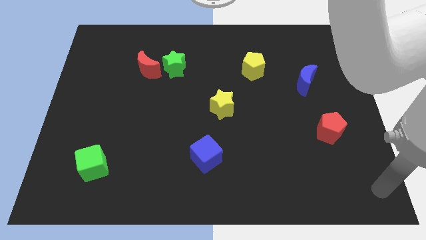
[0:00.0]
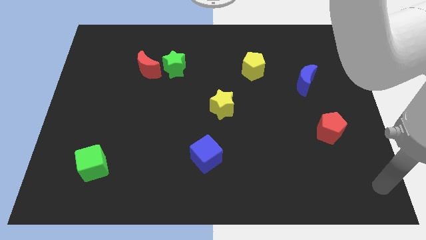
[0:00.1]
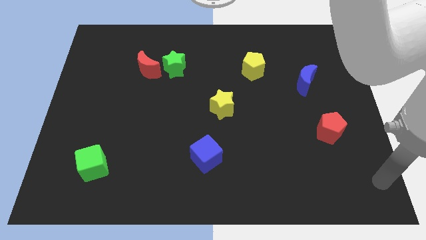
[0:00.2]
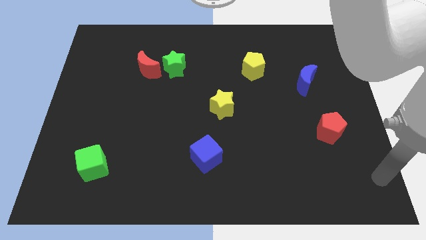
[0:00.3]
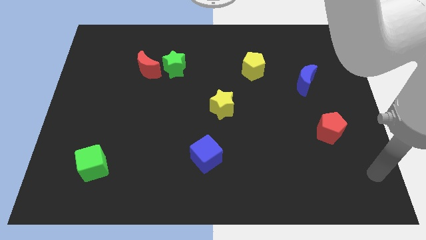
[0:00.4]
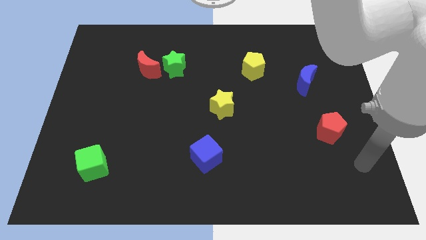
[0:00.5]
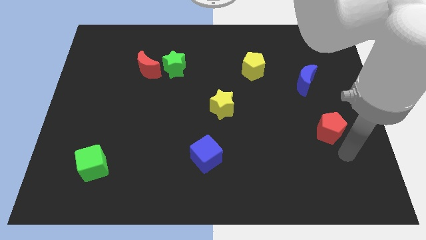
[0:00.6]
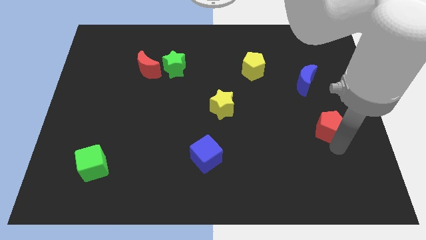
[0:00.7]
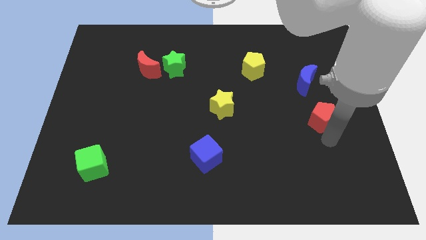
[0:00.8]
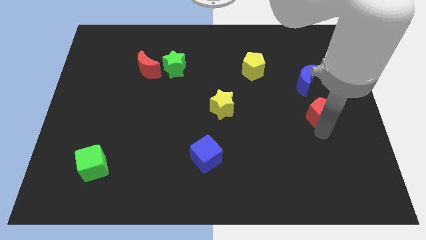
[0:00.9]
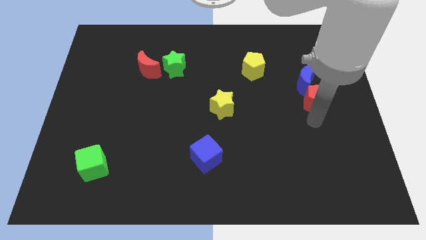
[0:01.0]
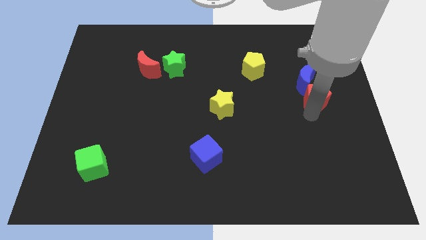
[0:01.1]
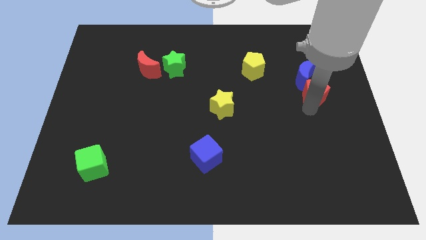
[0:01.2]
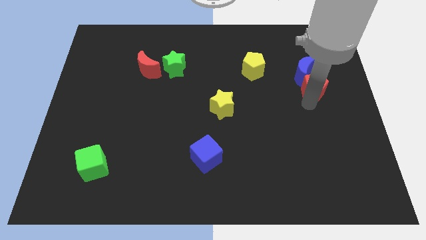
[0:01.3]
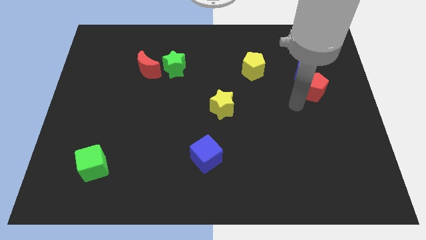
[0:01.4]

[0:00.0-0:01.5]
move the red pentagon into the blue moon

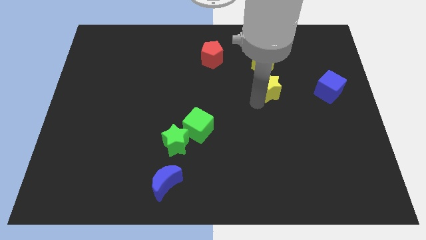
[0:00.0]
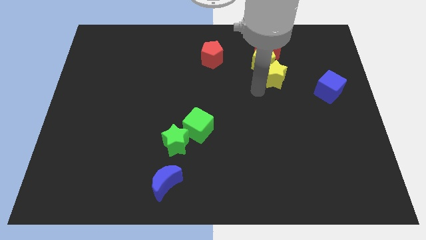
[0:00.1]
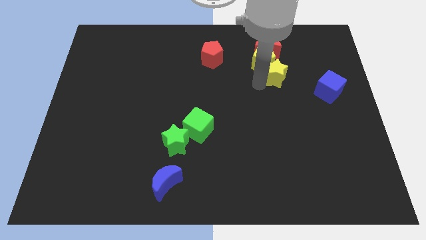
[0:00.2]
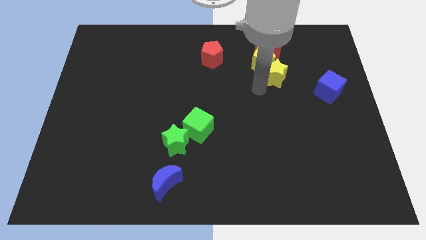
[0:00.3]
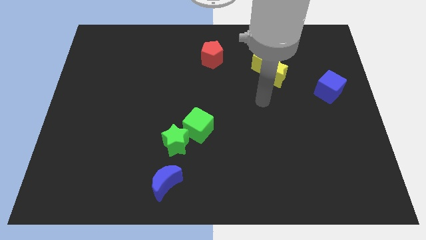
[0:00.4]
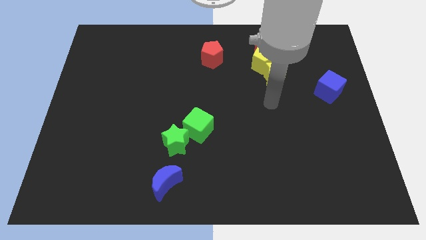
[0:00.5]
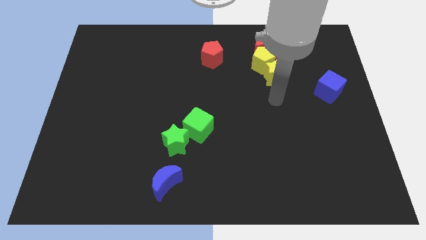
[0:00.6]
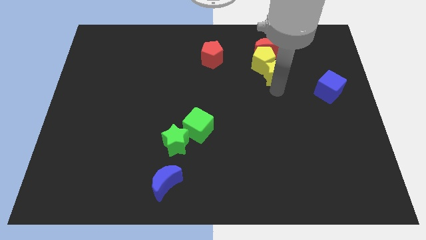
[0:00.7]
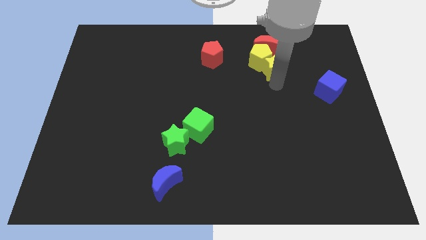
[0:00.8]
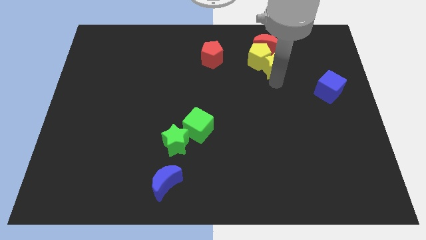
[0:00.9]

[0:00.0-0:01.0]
push yellow star slightly towards up

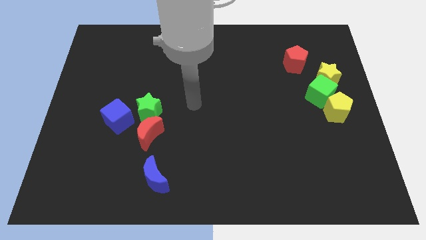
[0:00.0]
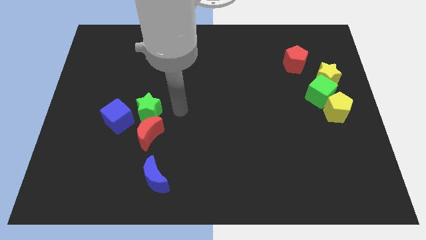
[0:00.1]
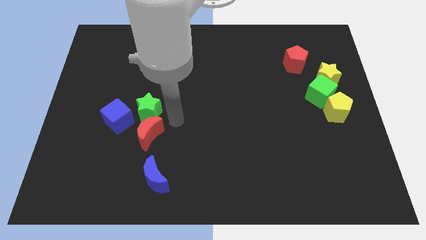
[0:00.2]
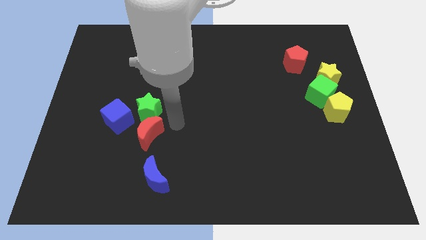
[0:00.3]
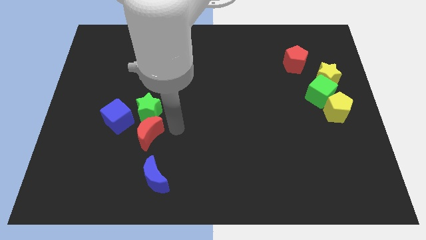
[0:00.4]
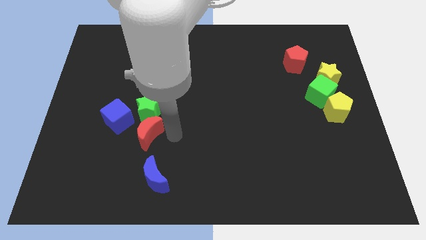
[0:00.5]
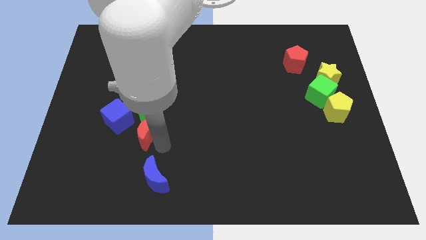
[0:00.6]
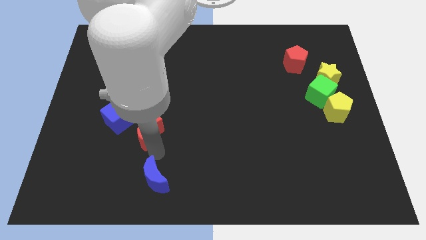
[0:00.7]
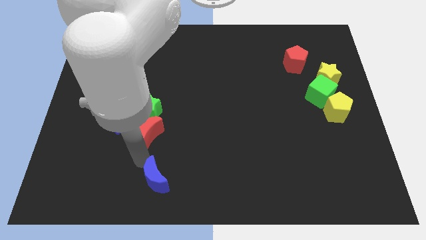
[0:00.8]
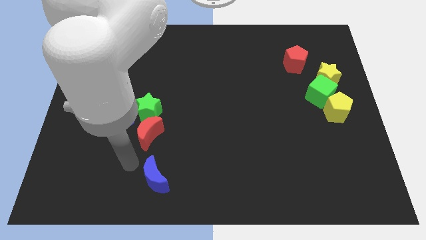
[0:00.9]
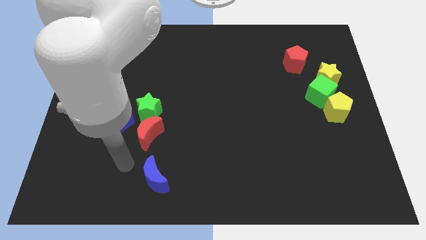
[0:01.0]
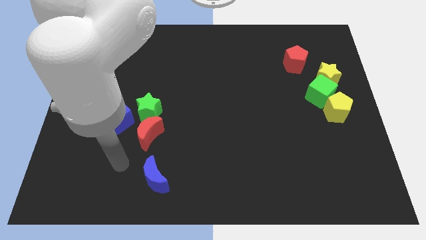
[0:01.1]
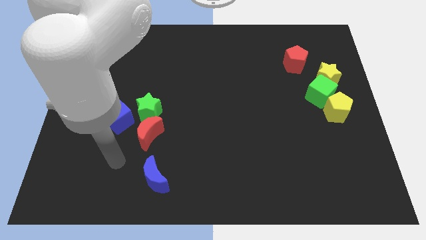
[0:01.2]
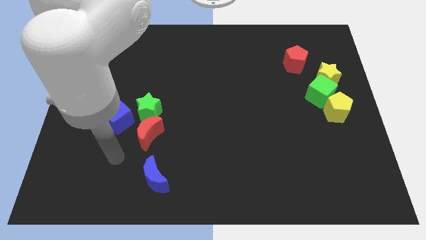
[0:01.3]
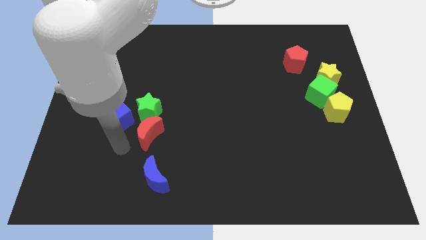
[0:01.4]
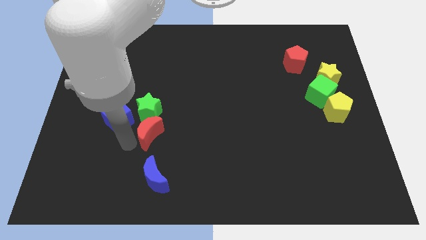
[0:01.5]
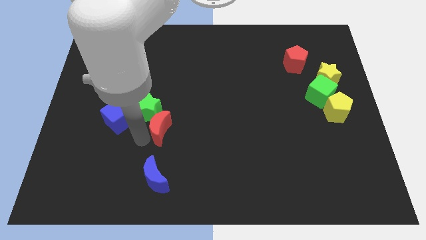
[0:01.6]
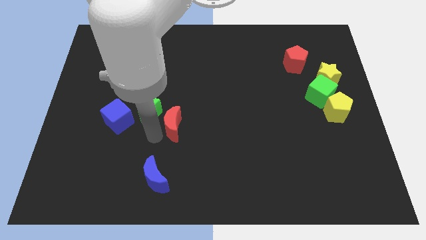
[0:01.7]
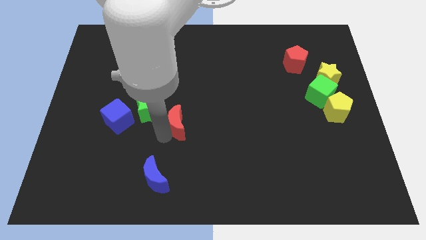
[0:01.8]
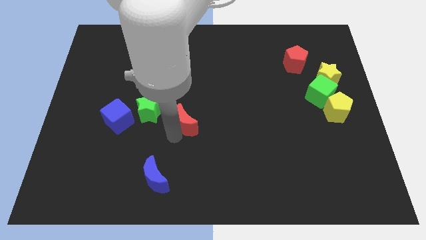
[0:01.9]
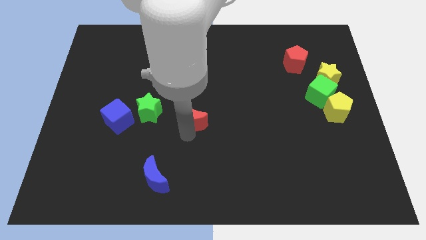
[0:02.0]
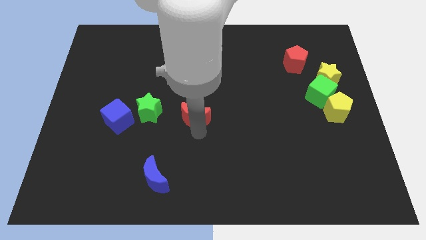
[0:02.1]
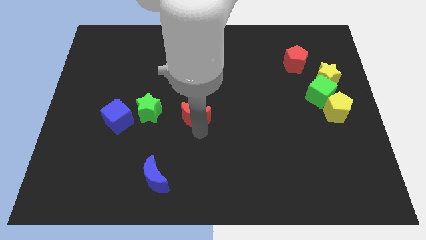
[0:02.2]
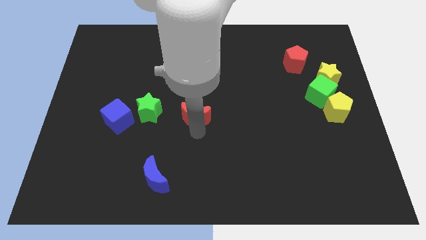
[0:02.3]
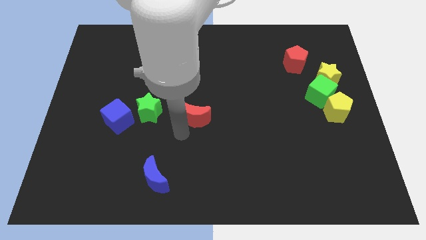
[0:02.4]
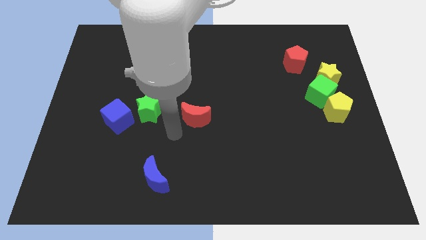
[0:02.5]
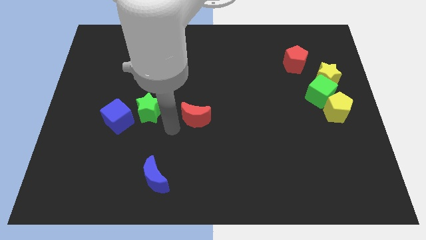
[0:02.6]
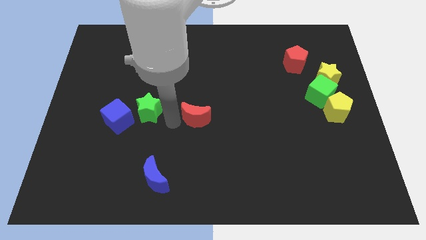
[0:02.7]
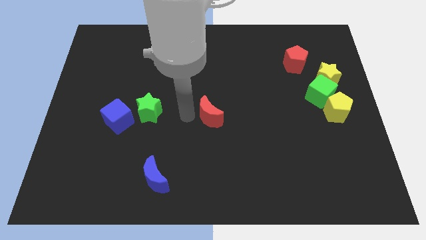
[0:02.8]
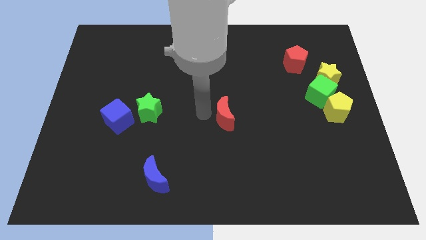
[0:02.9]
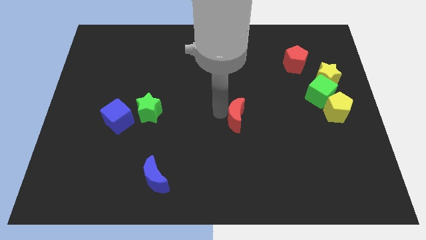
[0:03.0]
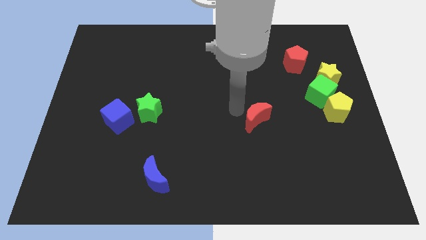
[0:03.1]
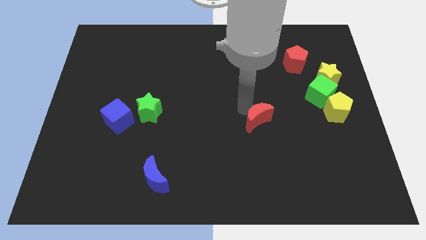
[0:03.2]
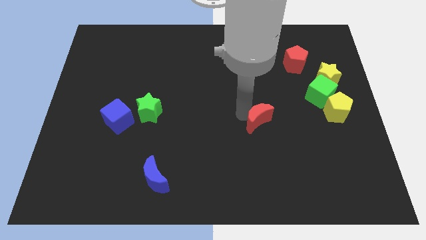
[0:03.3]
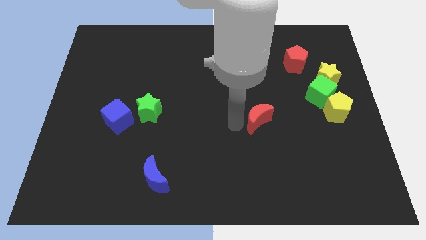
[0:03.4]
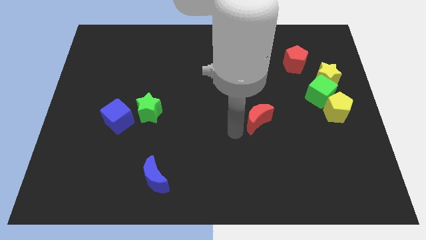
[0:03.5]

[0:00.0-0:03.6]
separate the red crescent from the green star

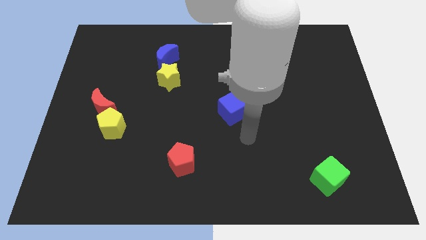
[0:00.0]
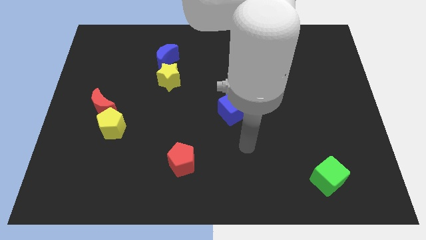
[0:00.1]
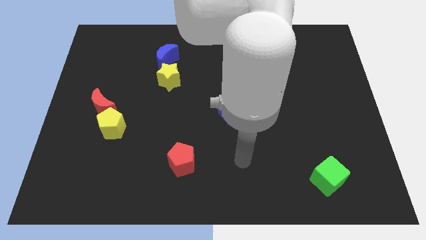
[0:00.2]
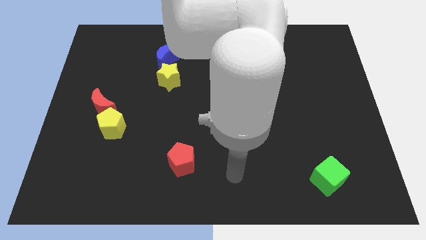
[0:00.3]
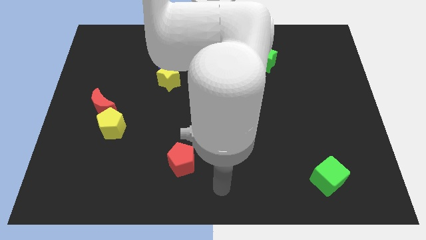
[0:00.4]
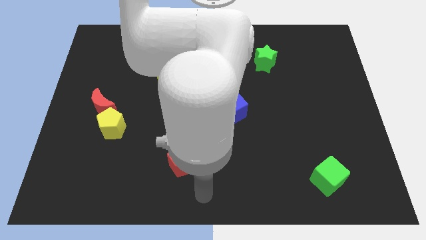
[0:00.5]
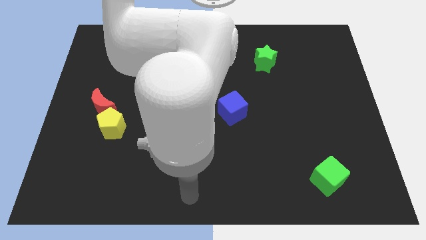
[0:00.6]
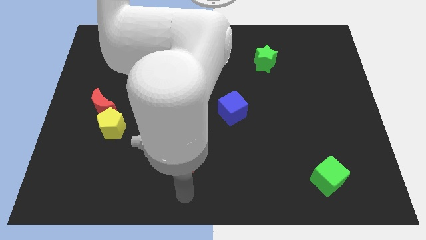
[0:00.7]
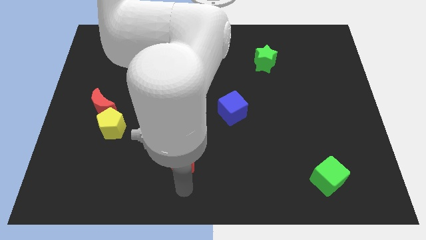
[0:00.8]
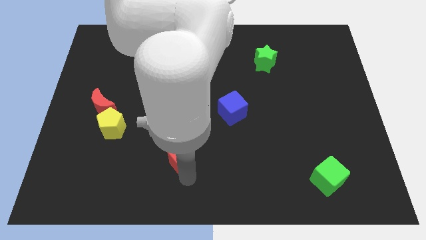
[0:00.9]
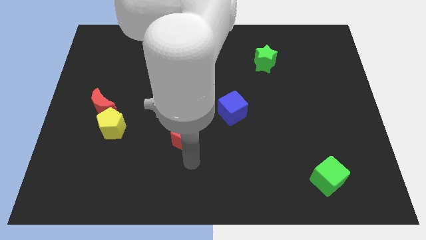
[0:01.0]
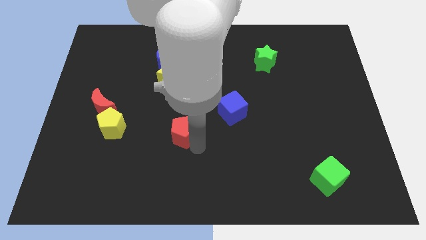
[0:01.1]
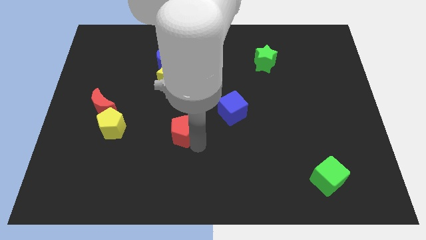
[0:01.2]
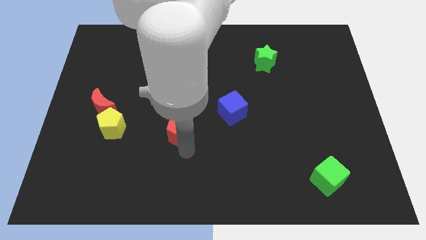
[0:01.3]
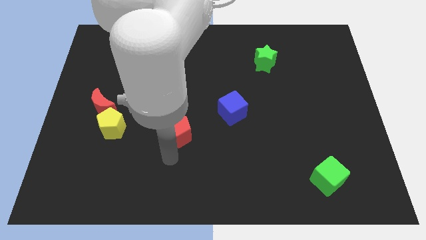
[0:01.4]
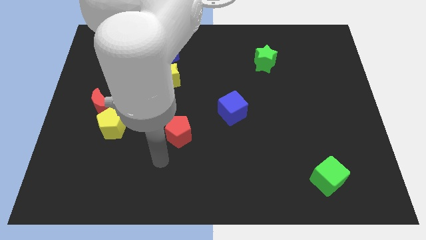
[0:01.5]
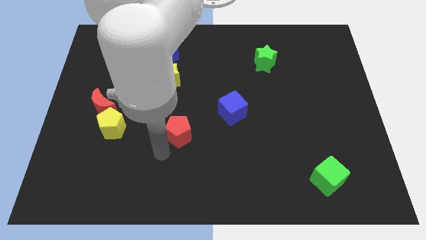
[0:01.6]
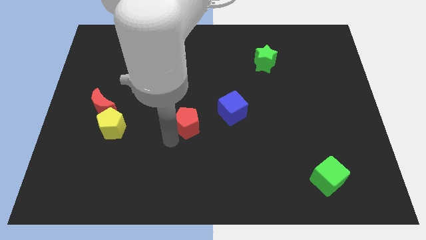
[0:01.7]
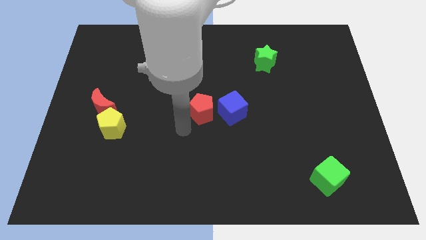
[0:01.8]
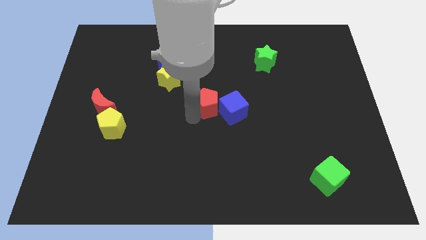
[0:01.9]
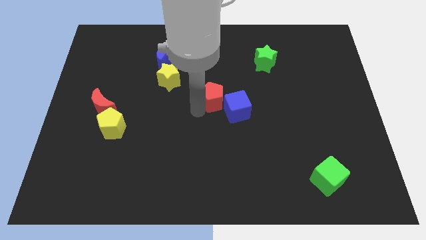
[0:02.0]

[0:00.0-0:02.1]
push the red pentagon towards the blue cube

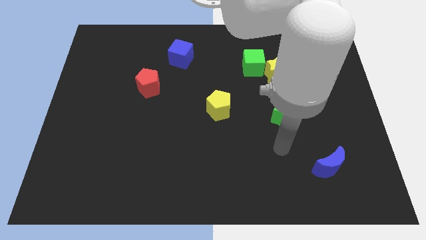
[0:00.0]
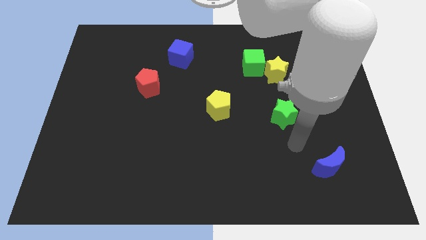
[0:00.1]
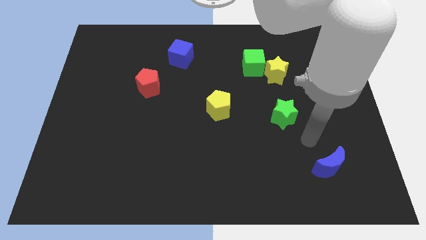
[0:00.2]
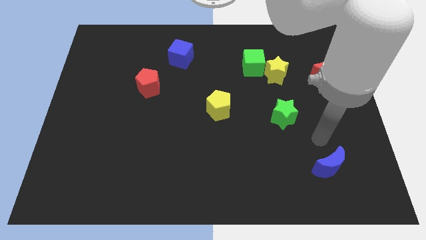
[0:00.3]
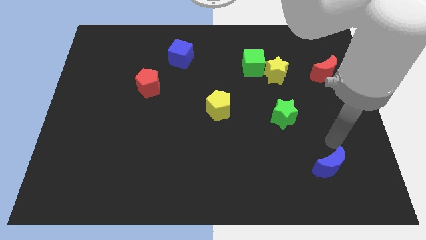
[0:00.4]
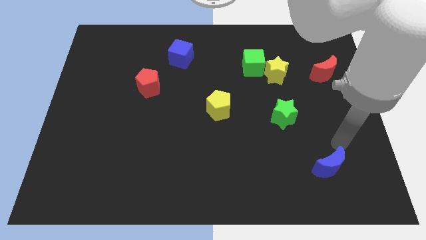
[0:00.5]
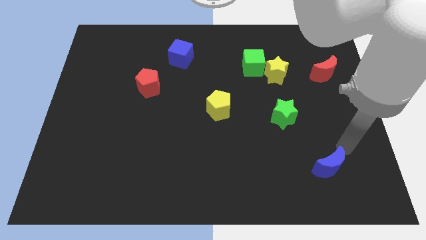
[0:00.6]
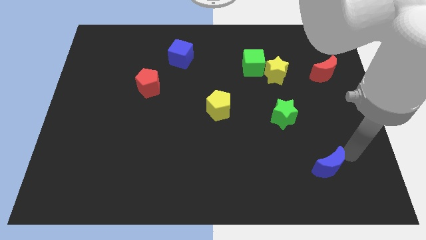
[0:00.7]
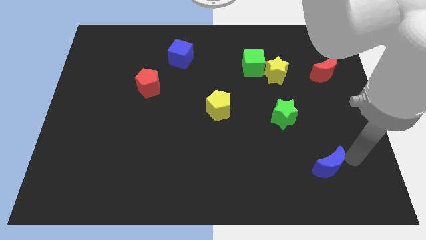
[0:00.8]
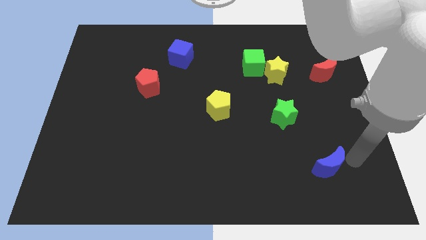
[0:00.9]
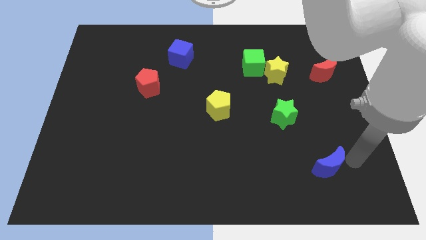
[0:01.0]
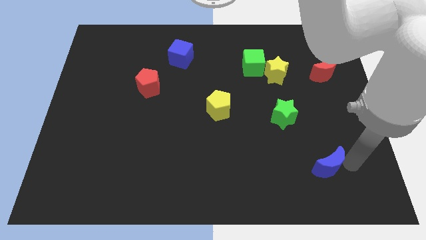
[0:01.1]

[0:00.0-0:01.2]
push your arm at the top right side of the blue moon
